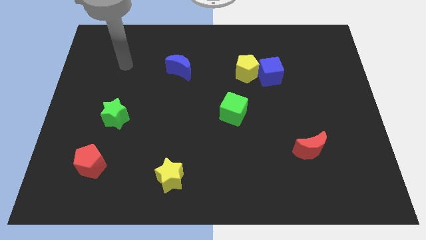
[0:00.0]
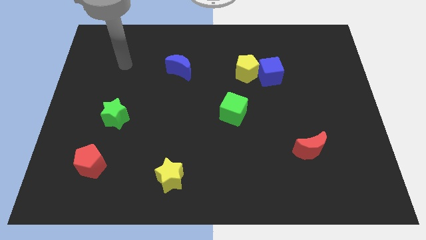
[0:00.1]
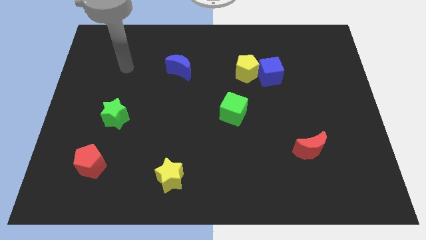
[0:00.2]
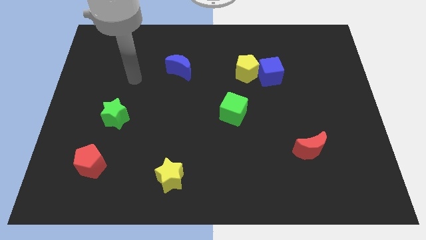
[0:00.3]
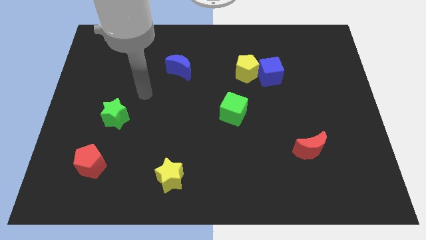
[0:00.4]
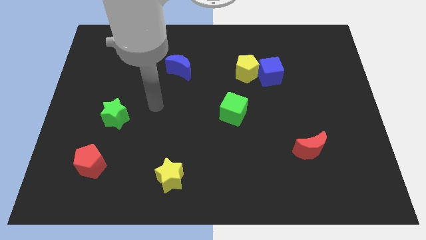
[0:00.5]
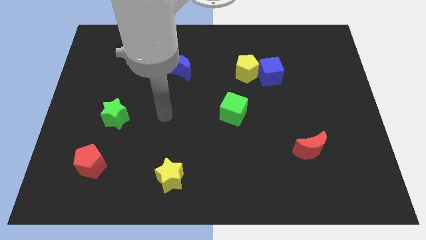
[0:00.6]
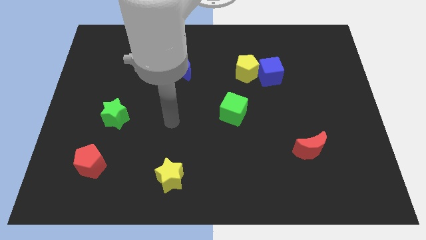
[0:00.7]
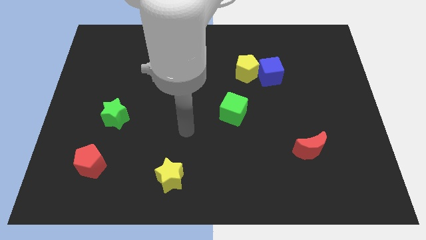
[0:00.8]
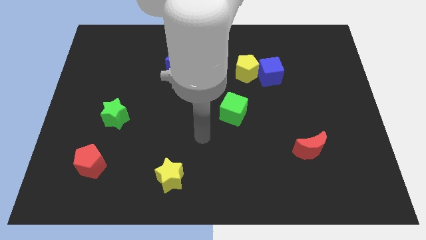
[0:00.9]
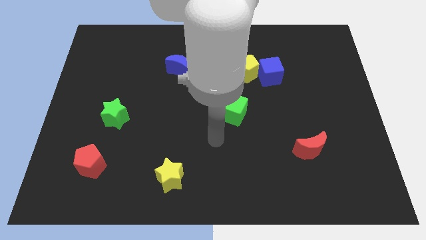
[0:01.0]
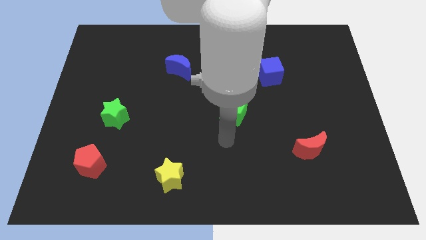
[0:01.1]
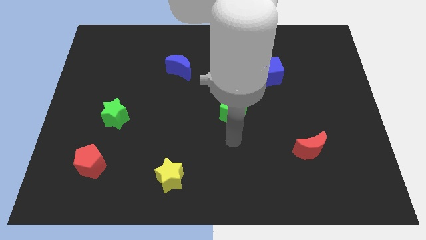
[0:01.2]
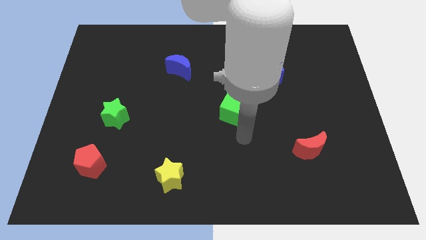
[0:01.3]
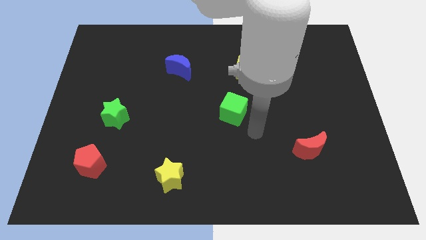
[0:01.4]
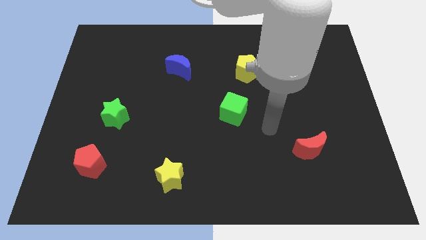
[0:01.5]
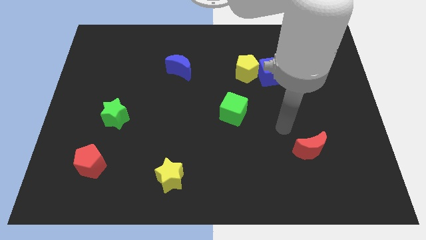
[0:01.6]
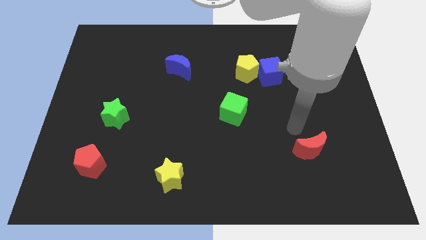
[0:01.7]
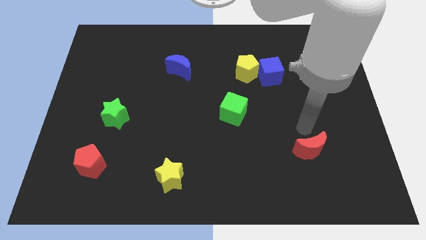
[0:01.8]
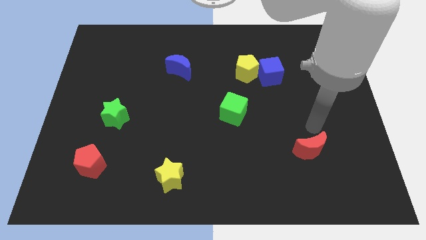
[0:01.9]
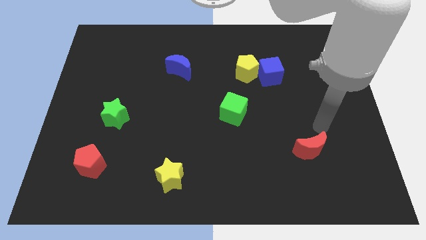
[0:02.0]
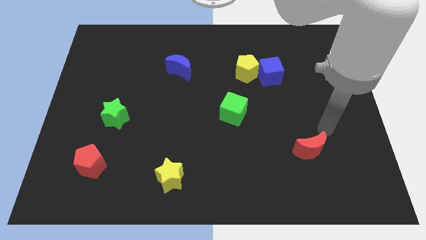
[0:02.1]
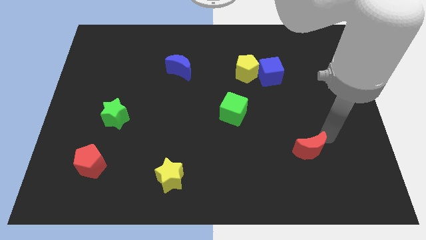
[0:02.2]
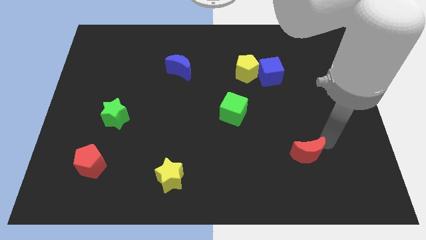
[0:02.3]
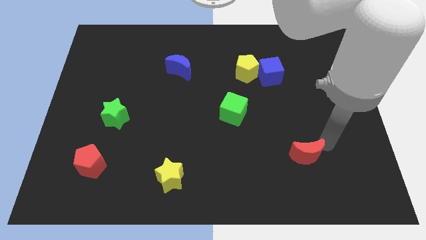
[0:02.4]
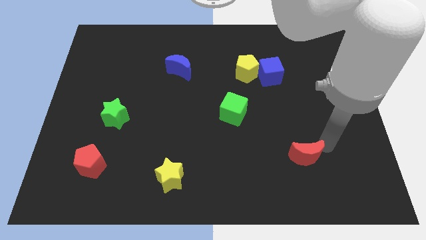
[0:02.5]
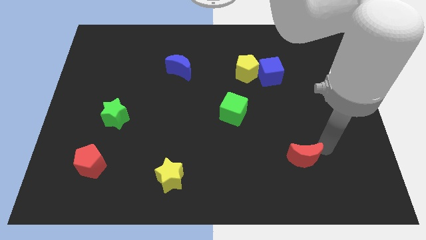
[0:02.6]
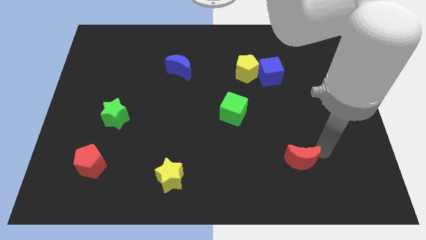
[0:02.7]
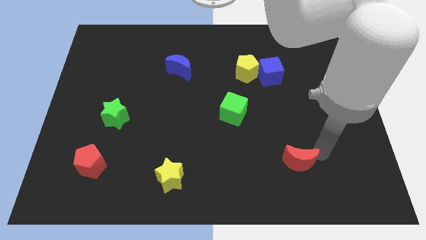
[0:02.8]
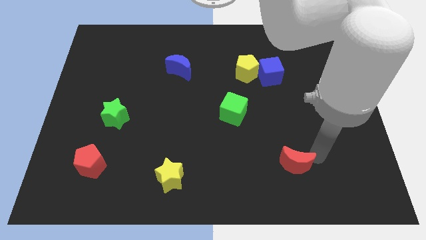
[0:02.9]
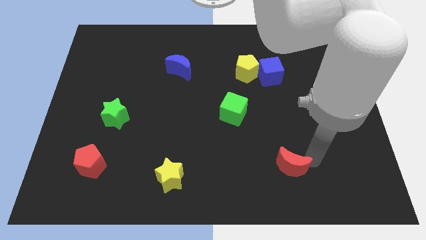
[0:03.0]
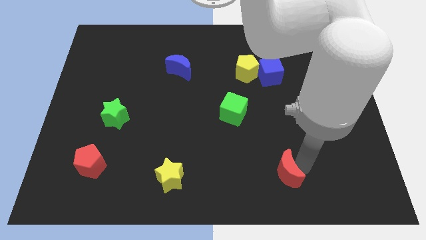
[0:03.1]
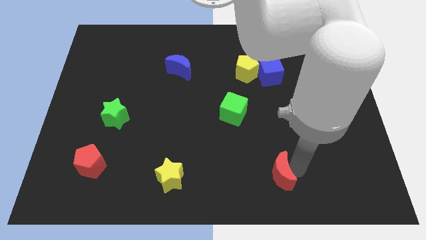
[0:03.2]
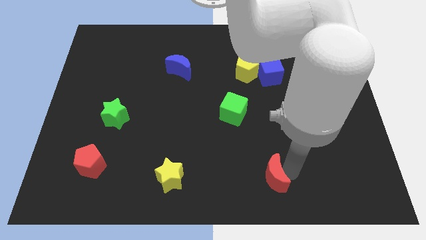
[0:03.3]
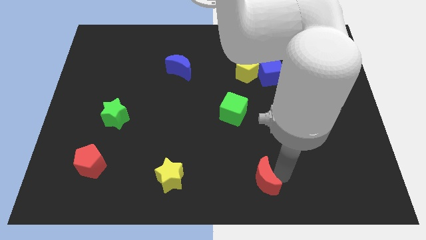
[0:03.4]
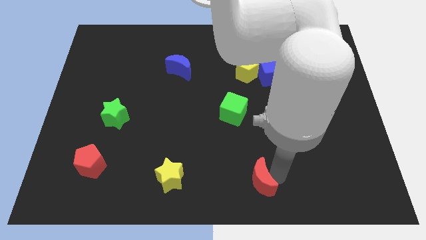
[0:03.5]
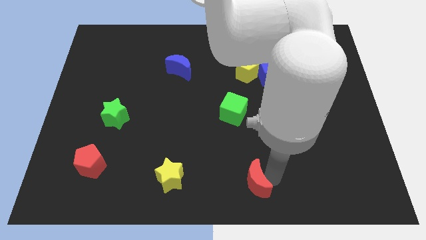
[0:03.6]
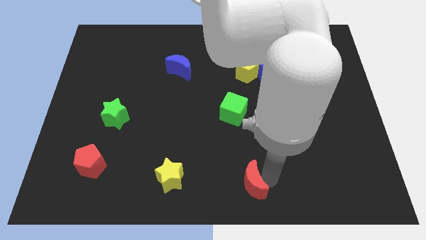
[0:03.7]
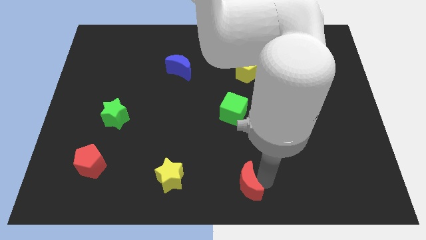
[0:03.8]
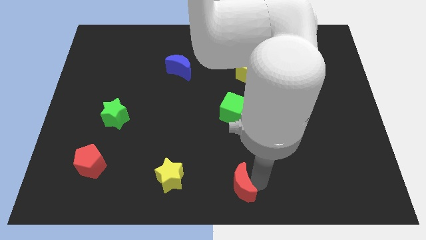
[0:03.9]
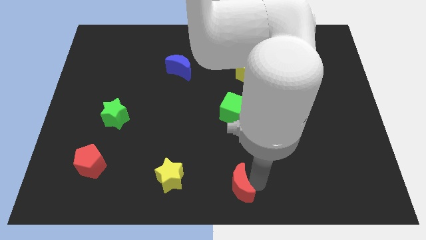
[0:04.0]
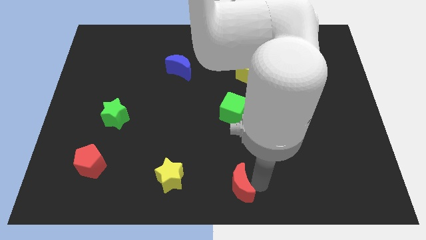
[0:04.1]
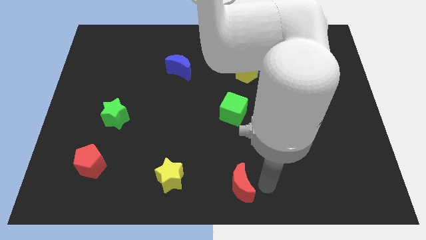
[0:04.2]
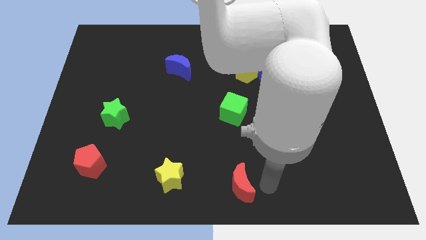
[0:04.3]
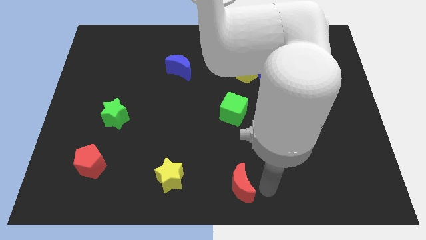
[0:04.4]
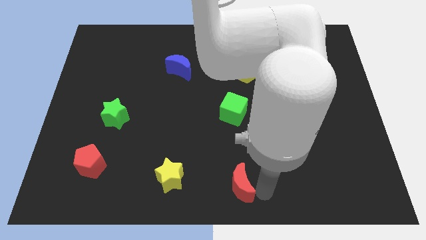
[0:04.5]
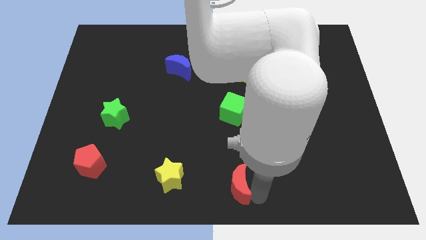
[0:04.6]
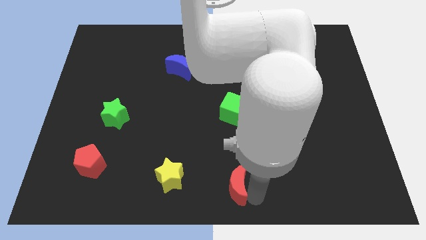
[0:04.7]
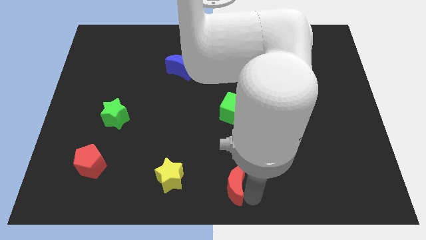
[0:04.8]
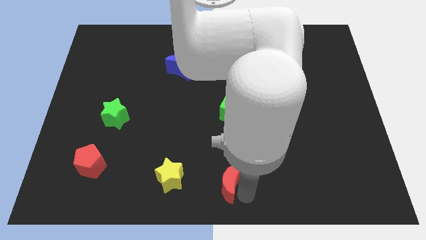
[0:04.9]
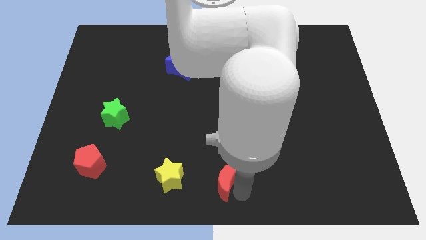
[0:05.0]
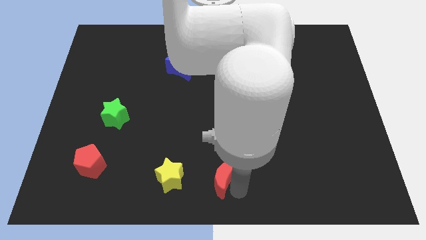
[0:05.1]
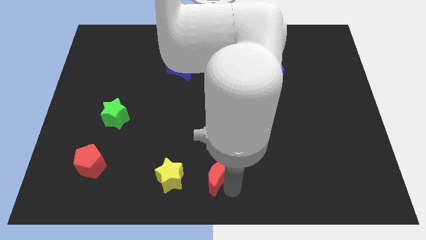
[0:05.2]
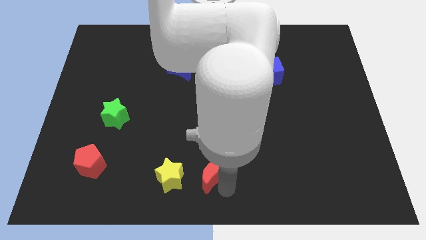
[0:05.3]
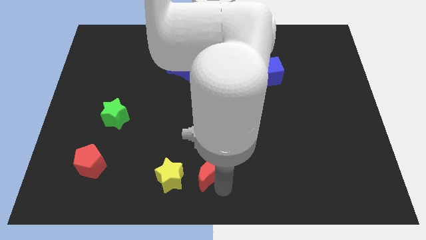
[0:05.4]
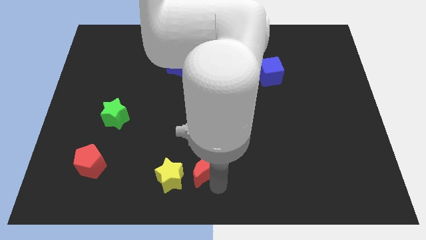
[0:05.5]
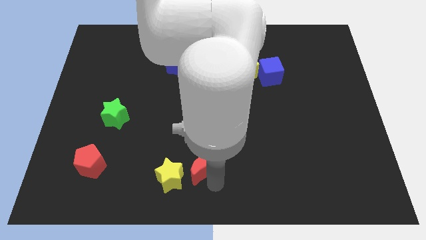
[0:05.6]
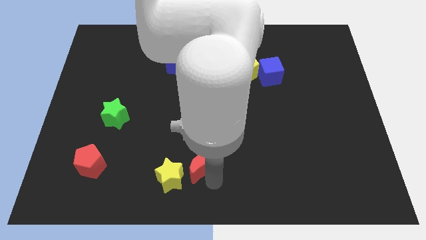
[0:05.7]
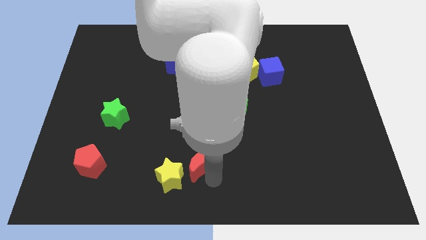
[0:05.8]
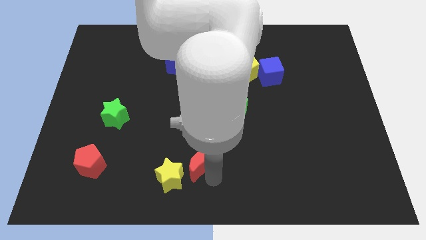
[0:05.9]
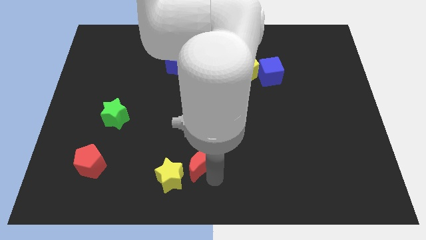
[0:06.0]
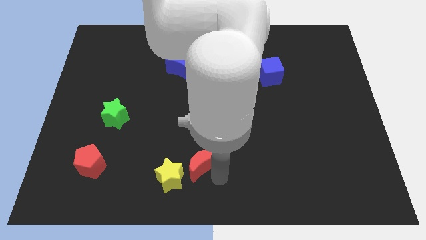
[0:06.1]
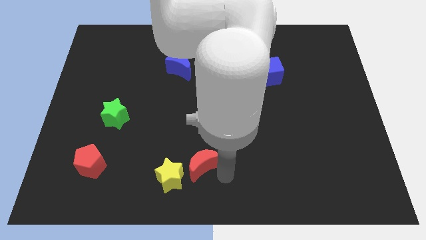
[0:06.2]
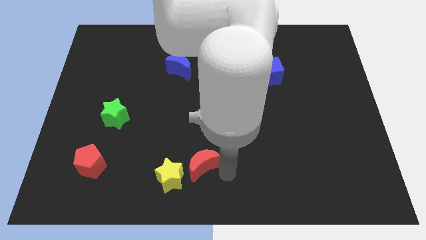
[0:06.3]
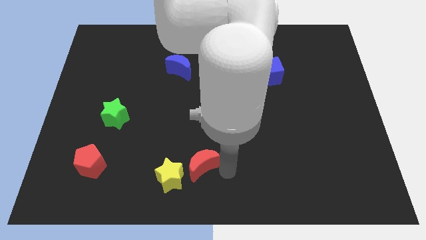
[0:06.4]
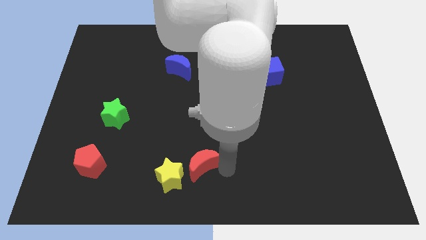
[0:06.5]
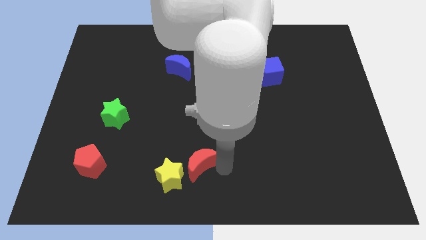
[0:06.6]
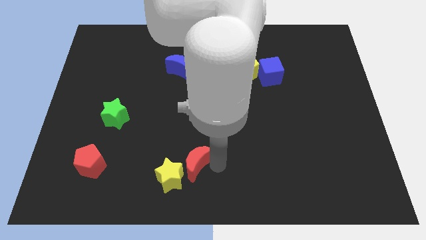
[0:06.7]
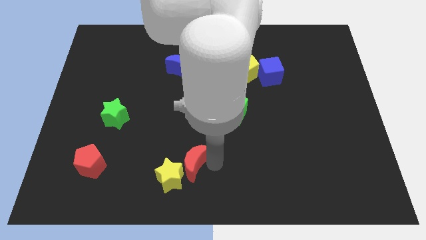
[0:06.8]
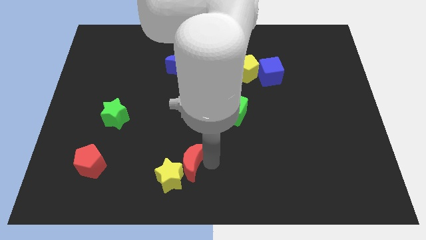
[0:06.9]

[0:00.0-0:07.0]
move the red moon towards the yellow star

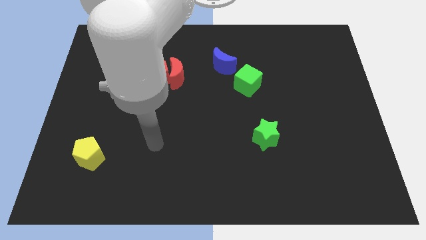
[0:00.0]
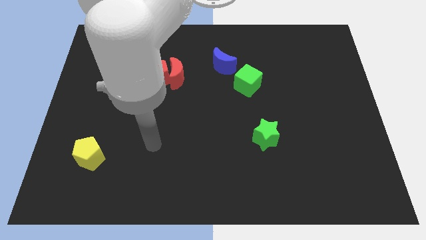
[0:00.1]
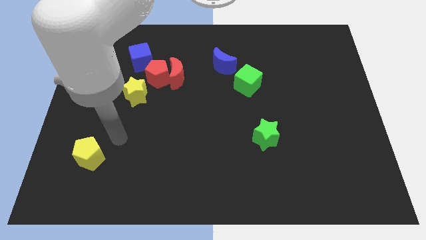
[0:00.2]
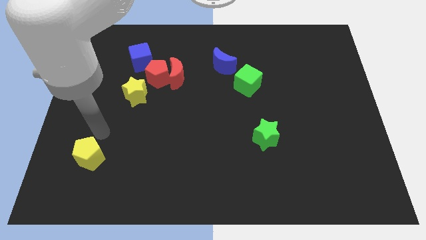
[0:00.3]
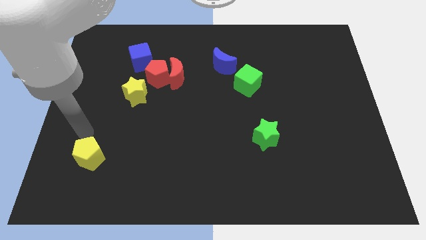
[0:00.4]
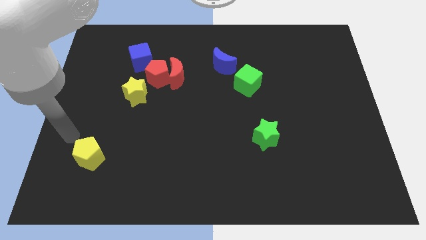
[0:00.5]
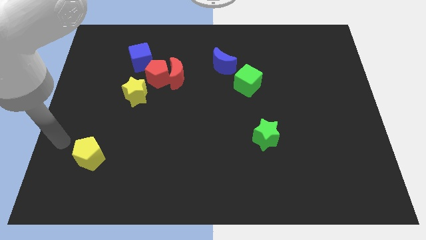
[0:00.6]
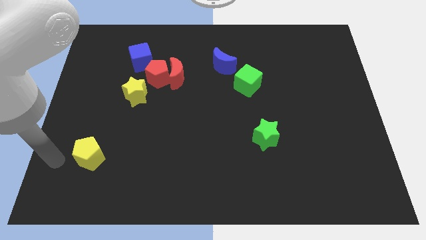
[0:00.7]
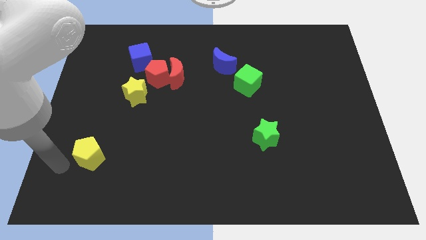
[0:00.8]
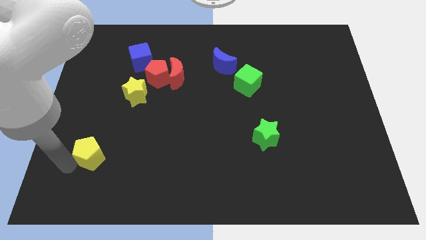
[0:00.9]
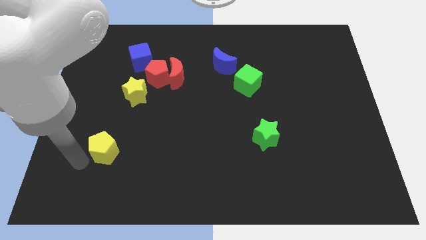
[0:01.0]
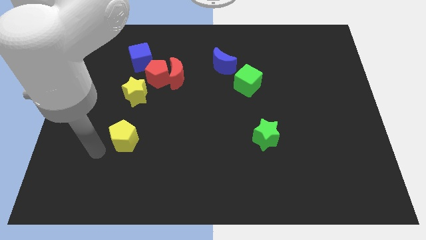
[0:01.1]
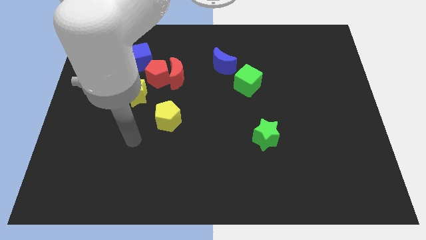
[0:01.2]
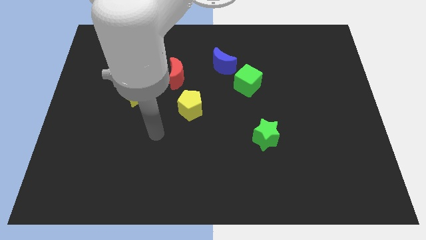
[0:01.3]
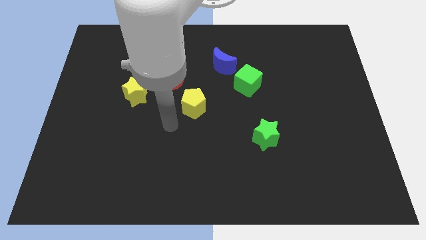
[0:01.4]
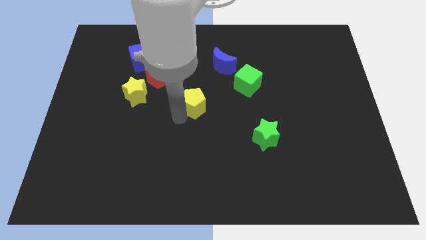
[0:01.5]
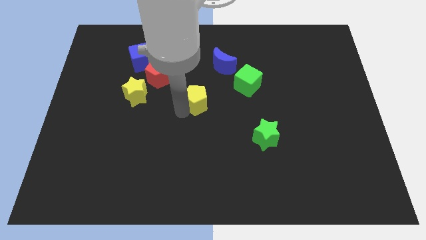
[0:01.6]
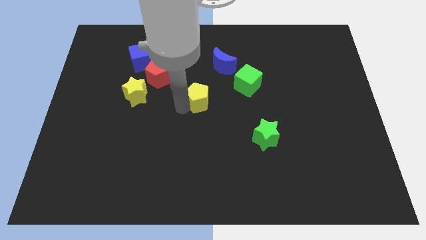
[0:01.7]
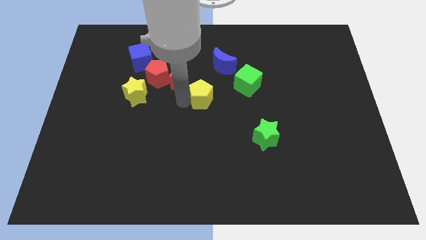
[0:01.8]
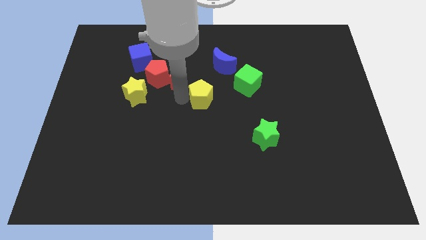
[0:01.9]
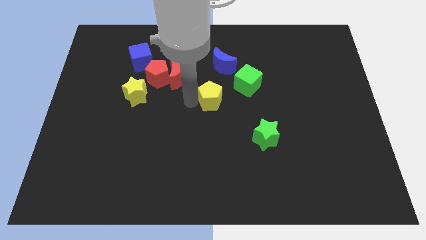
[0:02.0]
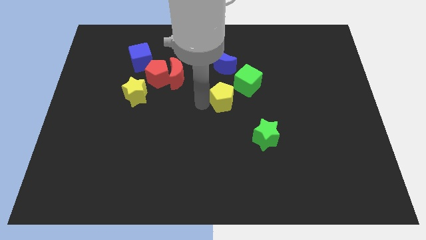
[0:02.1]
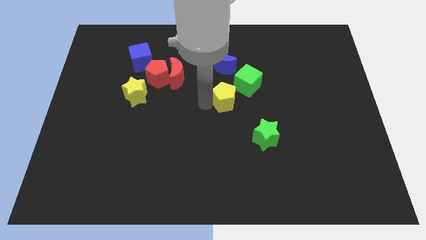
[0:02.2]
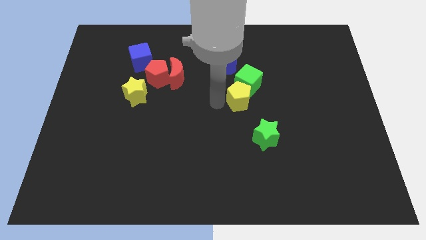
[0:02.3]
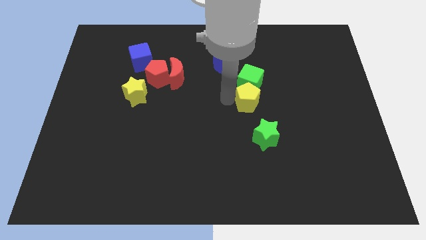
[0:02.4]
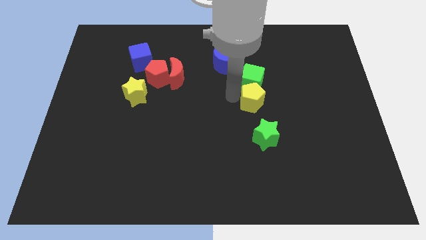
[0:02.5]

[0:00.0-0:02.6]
slide the yellow pentagon next to the green cube
